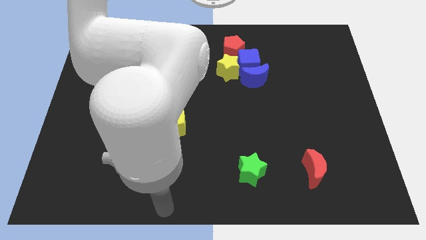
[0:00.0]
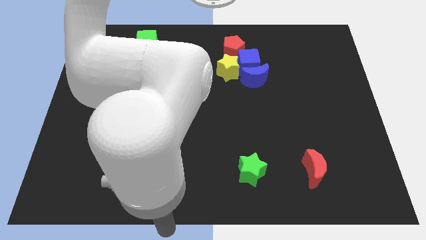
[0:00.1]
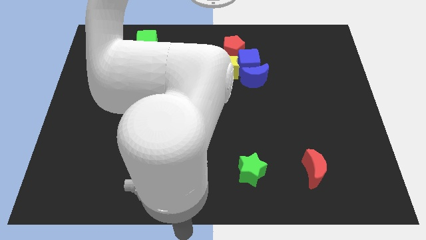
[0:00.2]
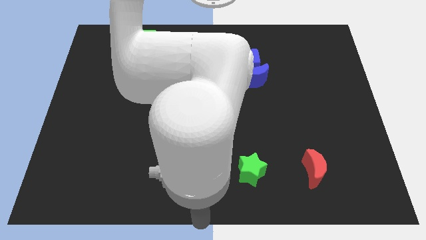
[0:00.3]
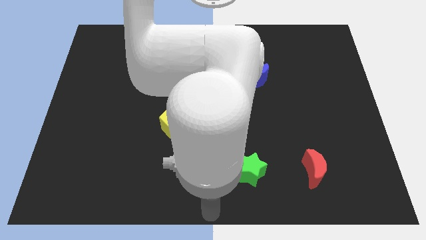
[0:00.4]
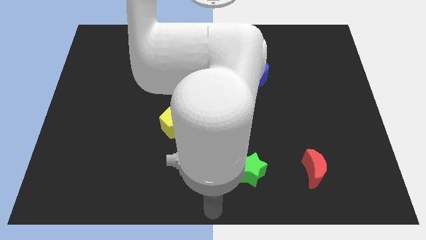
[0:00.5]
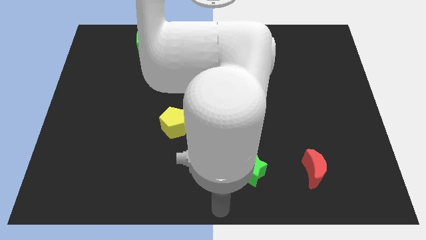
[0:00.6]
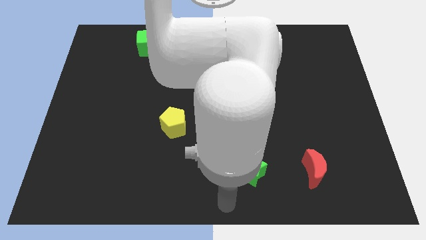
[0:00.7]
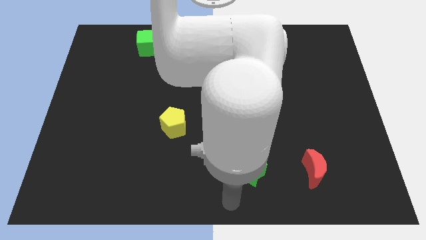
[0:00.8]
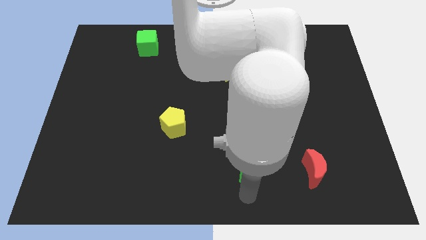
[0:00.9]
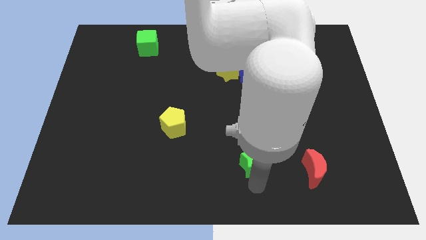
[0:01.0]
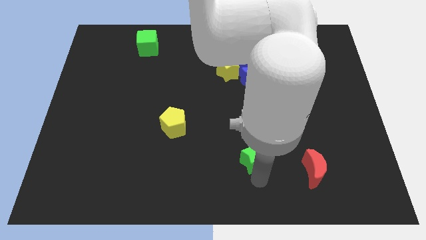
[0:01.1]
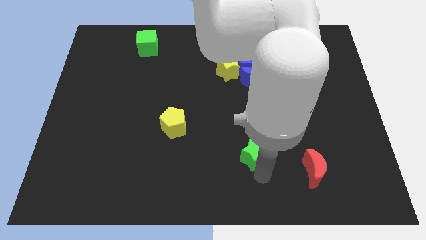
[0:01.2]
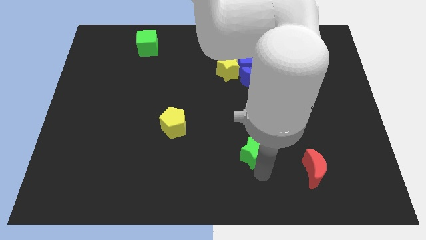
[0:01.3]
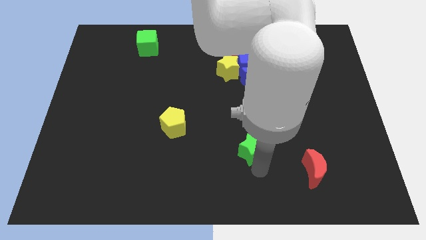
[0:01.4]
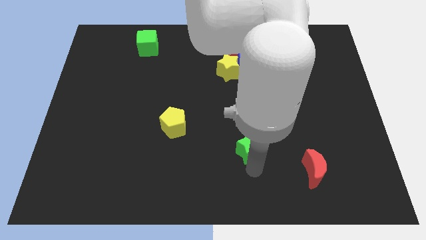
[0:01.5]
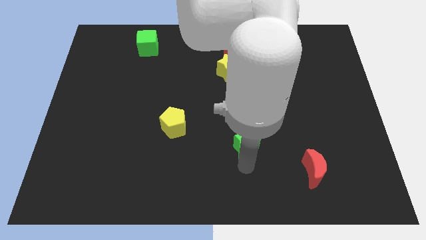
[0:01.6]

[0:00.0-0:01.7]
move your arm towards the green star

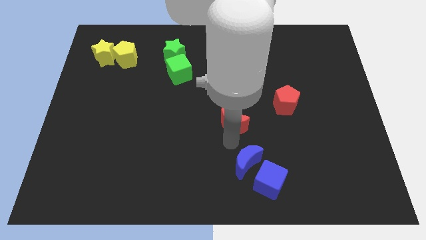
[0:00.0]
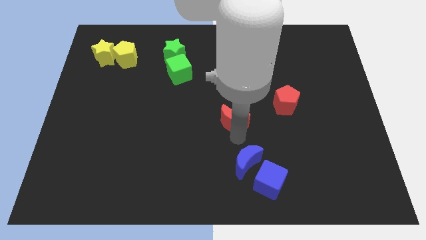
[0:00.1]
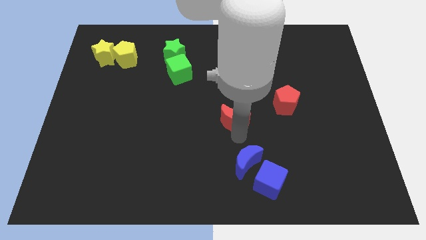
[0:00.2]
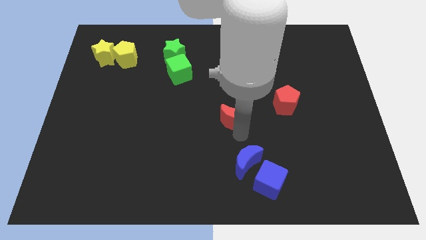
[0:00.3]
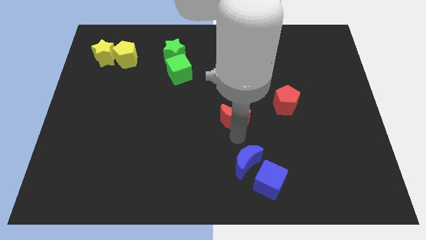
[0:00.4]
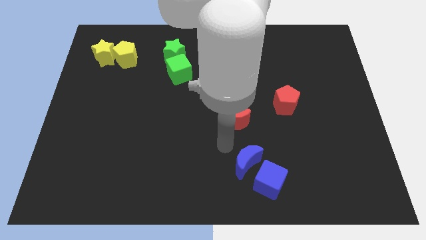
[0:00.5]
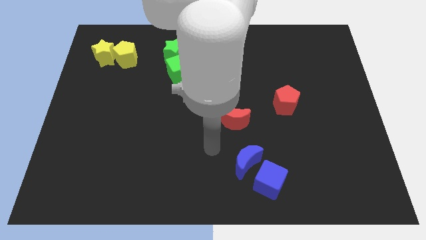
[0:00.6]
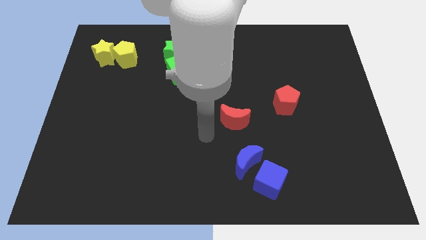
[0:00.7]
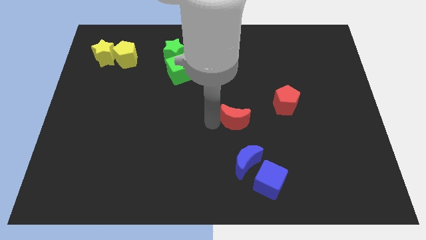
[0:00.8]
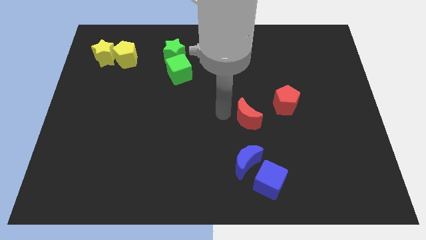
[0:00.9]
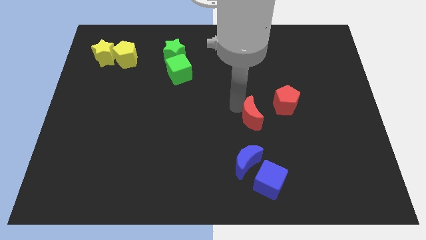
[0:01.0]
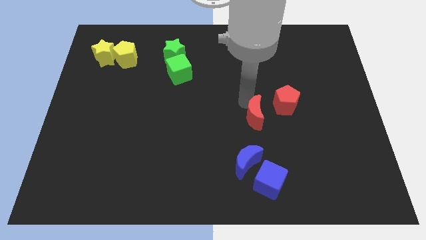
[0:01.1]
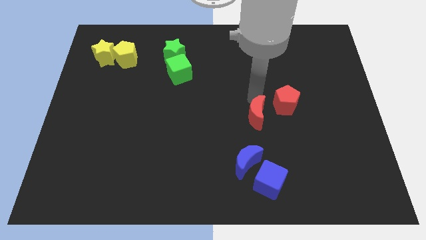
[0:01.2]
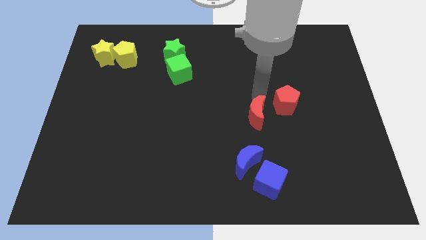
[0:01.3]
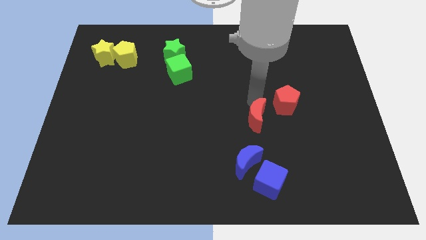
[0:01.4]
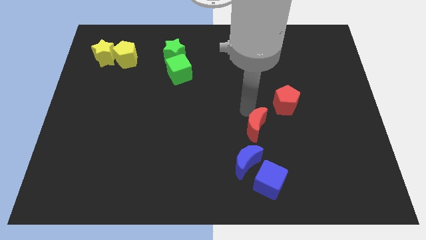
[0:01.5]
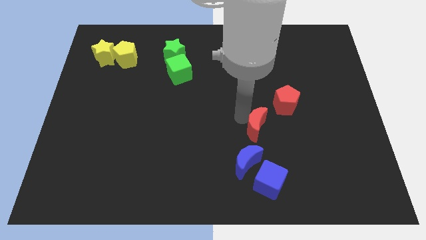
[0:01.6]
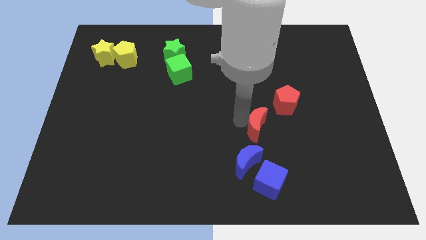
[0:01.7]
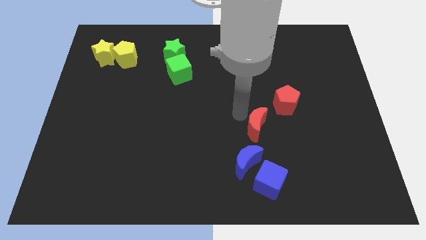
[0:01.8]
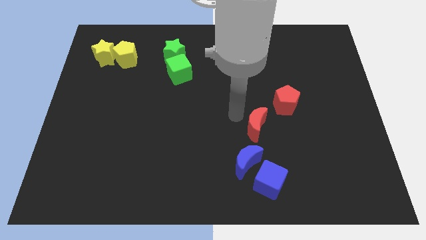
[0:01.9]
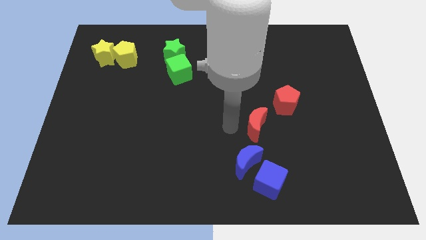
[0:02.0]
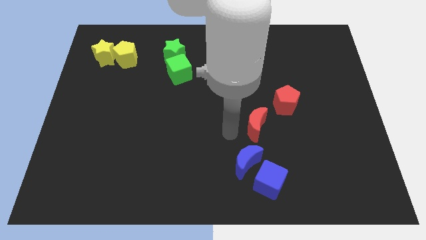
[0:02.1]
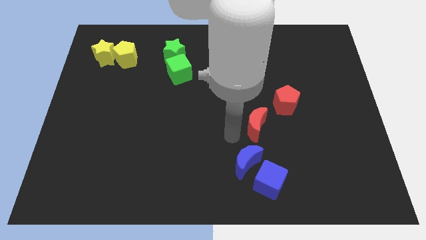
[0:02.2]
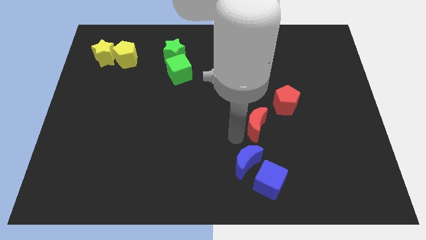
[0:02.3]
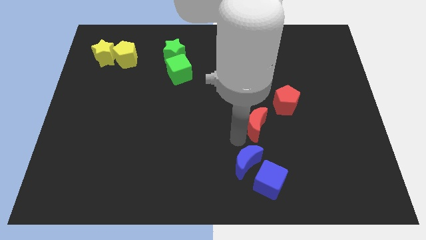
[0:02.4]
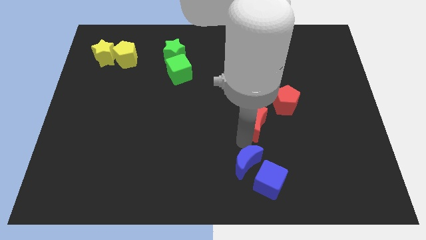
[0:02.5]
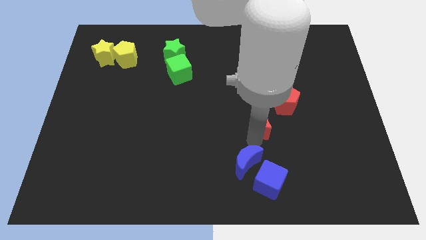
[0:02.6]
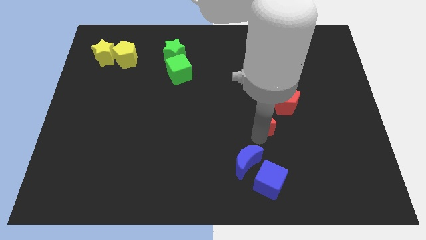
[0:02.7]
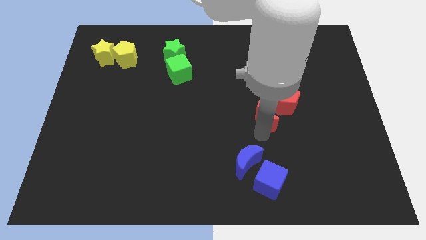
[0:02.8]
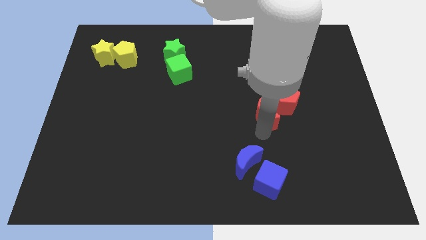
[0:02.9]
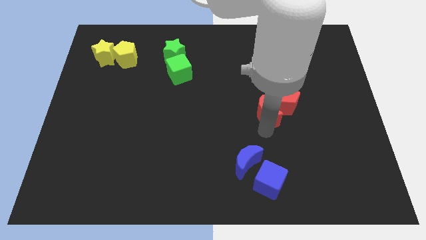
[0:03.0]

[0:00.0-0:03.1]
place the red moon horizontal to the blue cube

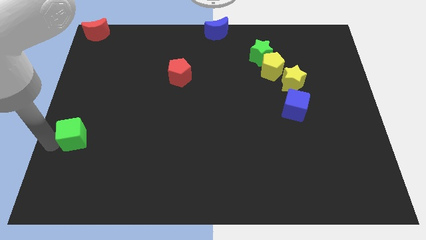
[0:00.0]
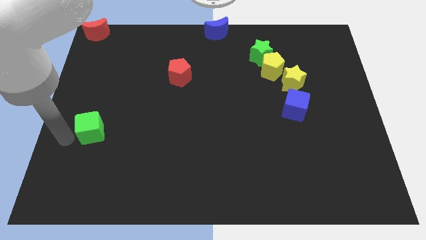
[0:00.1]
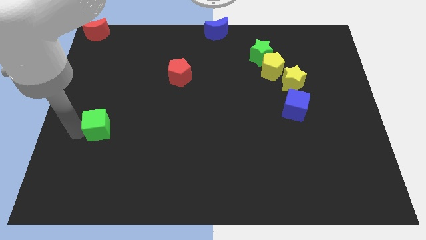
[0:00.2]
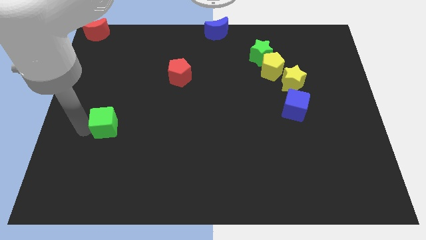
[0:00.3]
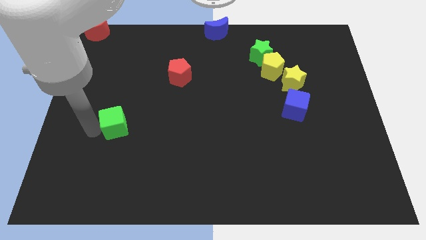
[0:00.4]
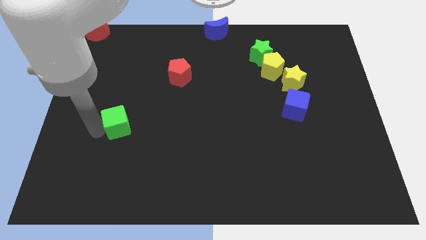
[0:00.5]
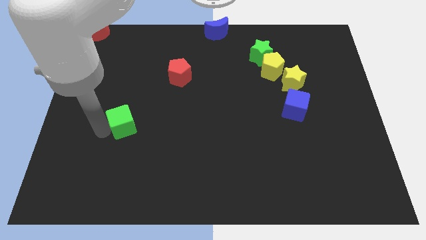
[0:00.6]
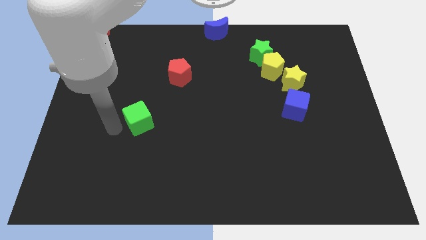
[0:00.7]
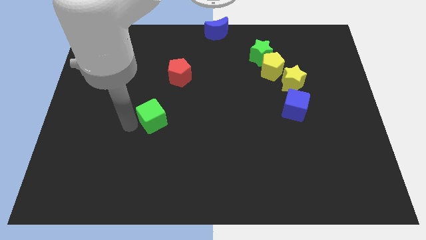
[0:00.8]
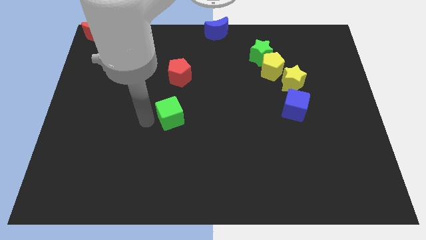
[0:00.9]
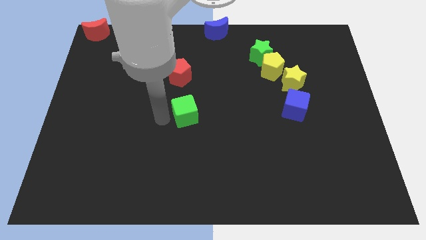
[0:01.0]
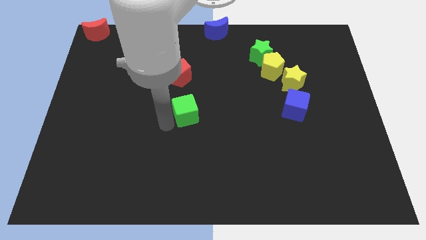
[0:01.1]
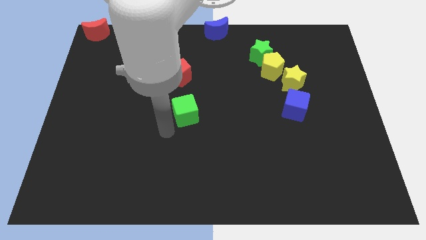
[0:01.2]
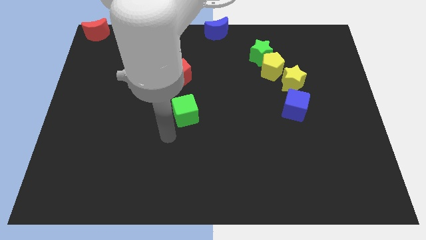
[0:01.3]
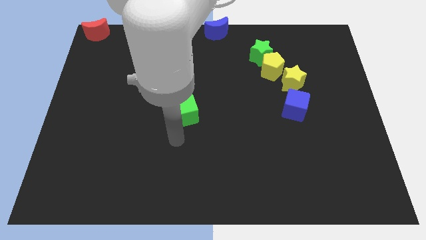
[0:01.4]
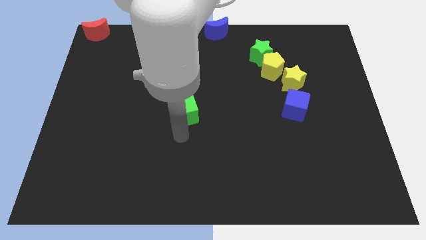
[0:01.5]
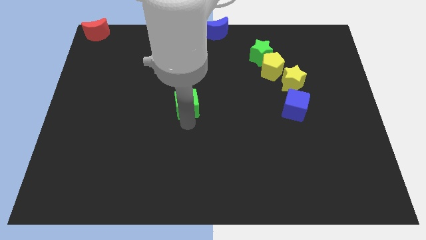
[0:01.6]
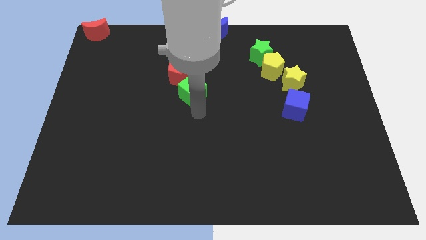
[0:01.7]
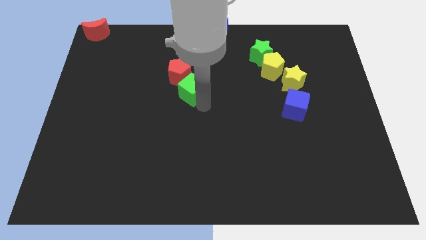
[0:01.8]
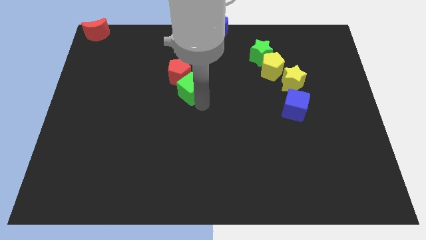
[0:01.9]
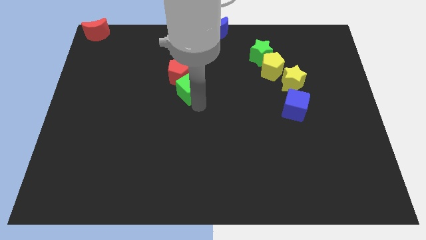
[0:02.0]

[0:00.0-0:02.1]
slide the green cube into the bottom side of the red pentagon

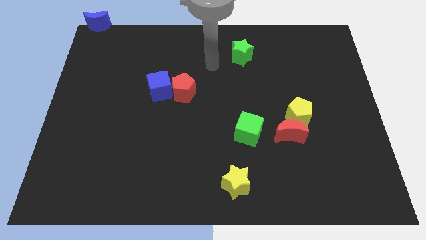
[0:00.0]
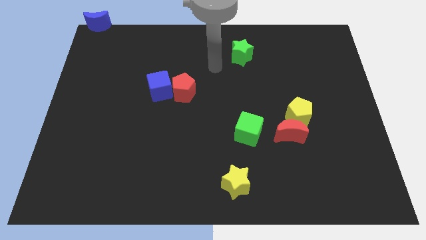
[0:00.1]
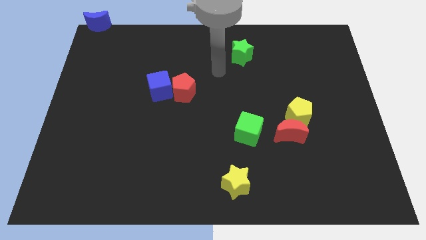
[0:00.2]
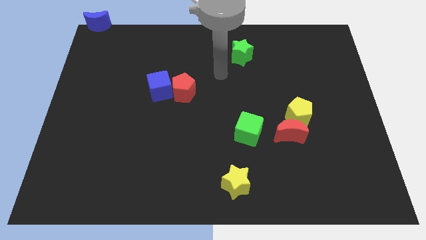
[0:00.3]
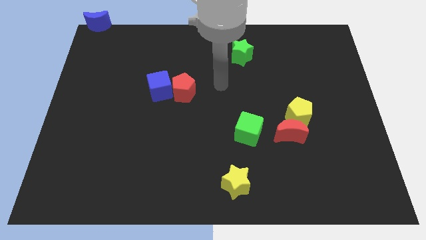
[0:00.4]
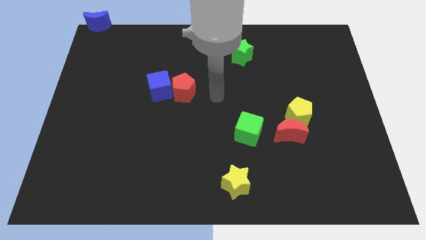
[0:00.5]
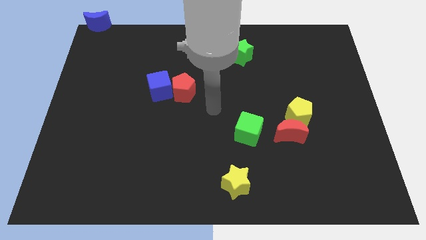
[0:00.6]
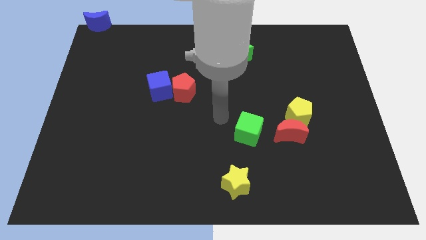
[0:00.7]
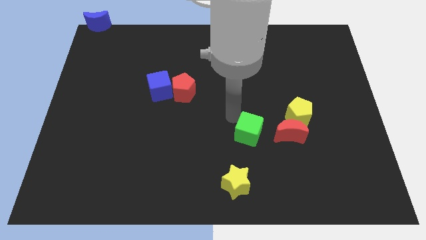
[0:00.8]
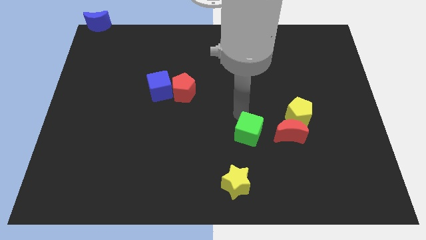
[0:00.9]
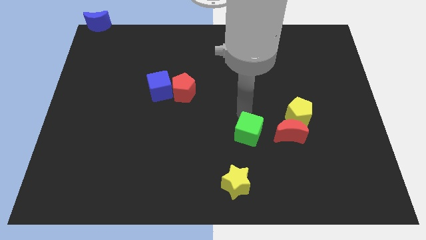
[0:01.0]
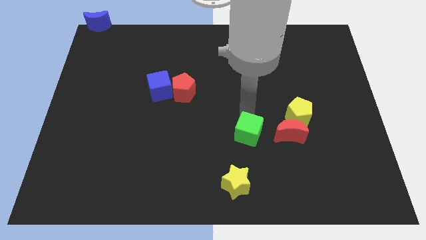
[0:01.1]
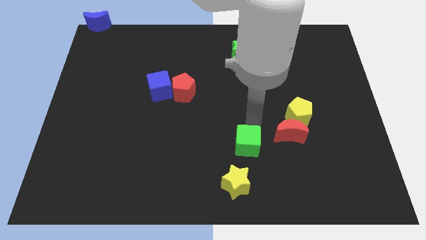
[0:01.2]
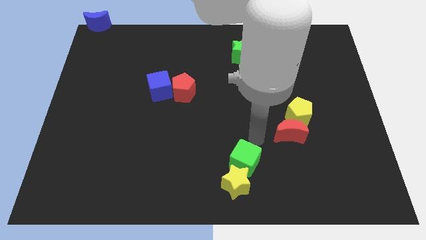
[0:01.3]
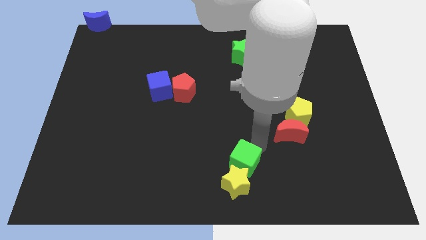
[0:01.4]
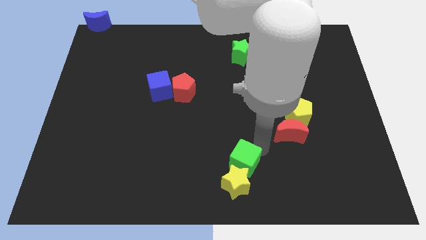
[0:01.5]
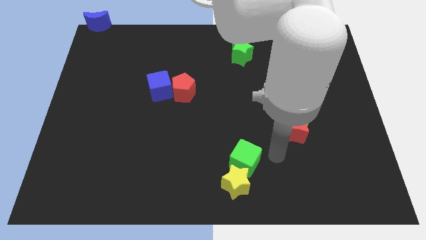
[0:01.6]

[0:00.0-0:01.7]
push green cube into the yellow star

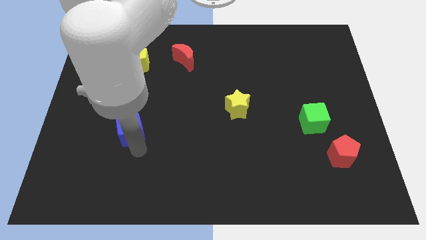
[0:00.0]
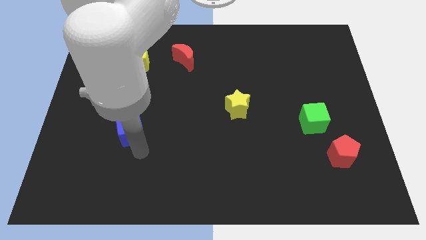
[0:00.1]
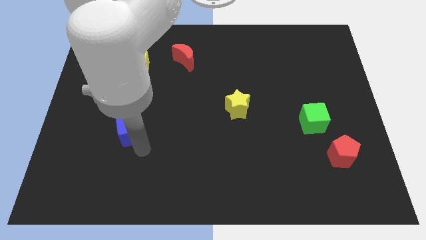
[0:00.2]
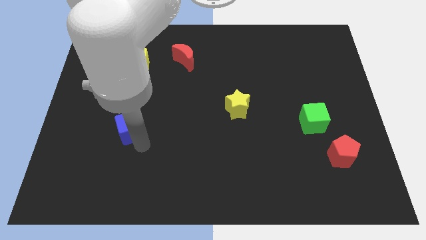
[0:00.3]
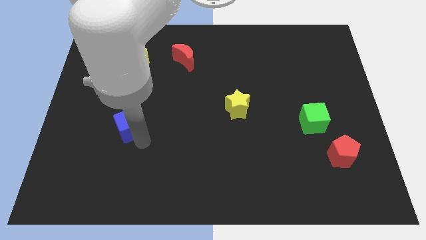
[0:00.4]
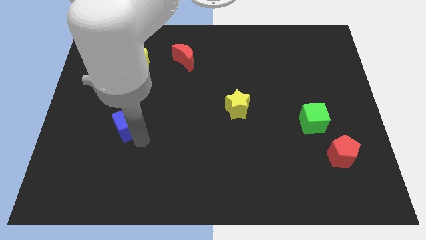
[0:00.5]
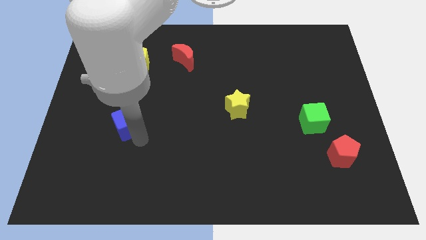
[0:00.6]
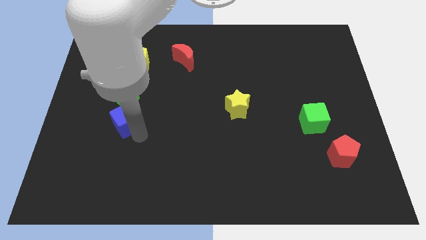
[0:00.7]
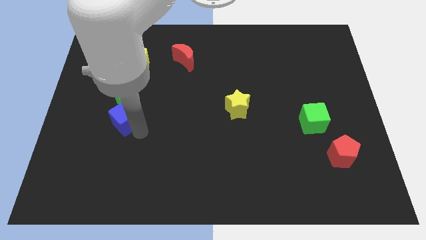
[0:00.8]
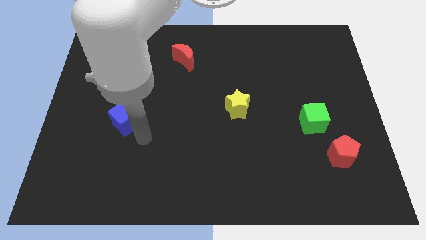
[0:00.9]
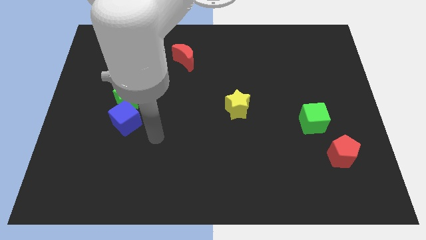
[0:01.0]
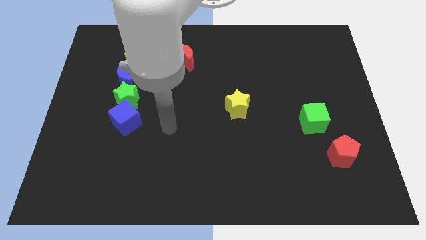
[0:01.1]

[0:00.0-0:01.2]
place the blue cube below the green star
